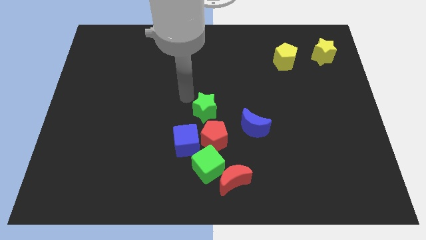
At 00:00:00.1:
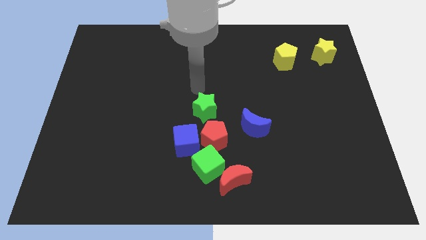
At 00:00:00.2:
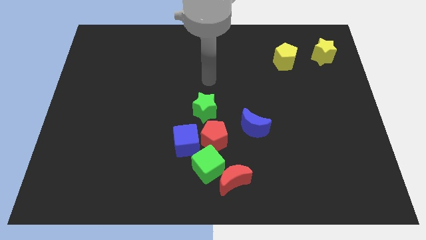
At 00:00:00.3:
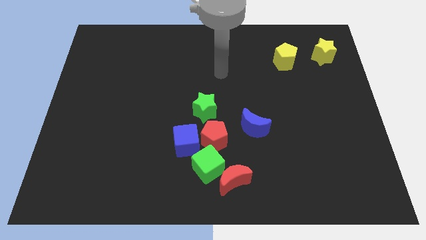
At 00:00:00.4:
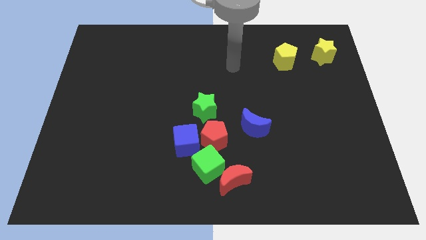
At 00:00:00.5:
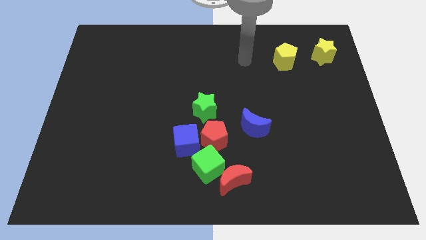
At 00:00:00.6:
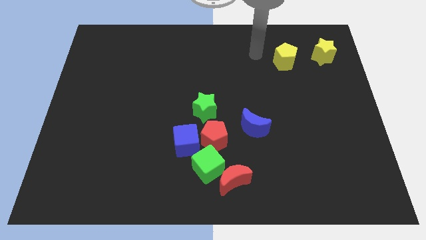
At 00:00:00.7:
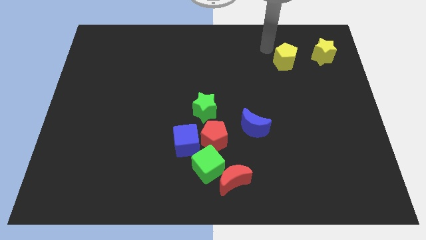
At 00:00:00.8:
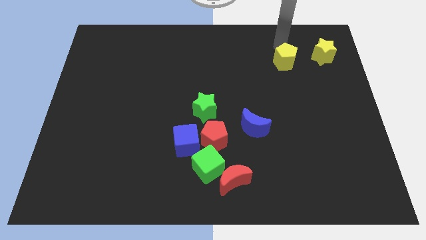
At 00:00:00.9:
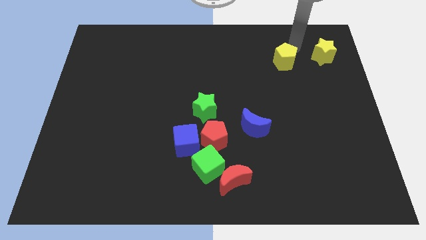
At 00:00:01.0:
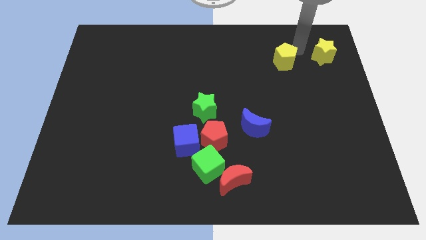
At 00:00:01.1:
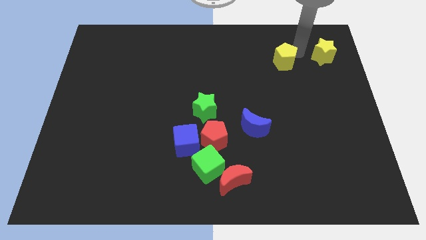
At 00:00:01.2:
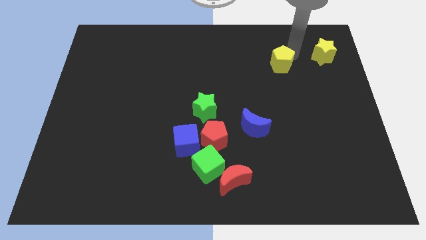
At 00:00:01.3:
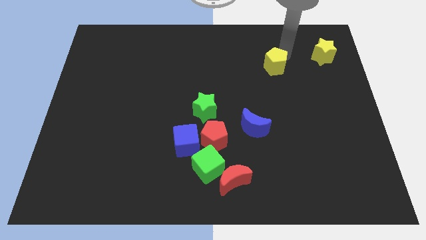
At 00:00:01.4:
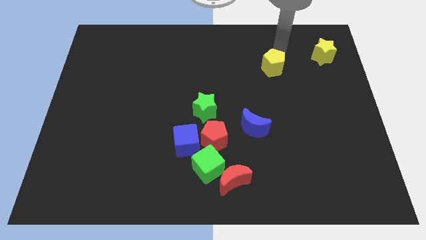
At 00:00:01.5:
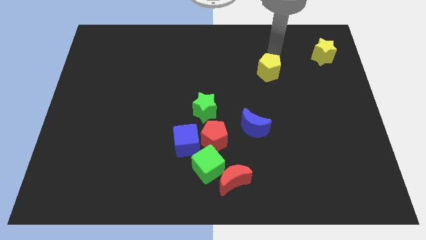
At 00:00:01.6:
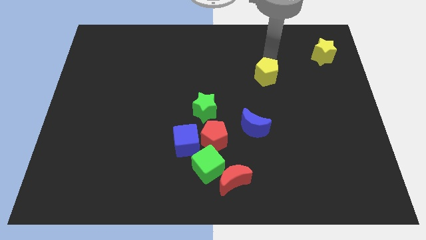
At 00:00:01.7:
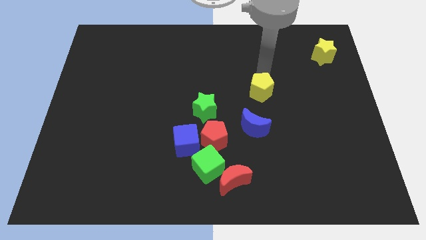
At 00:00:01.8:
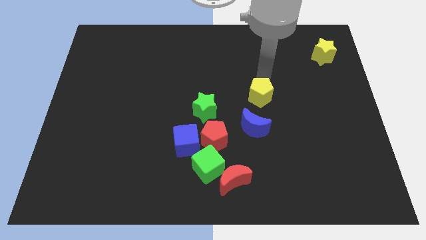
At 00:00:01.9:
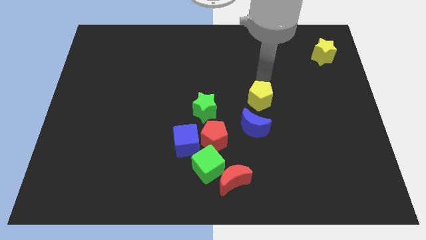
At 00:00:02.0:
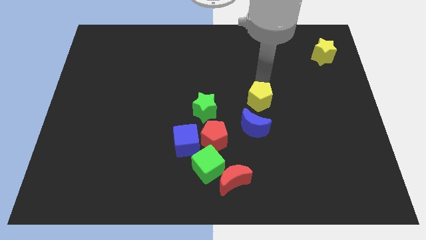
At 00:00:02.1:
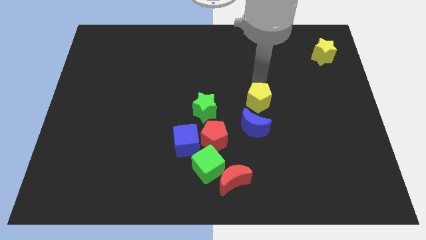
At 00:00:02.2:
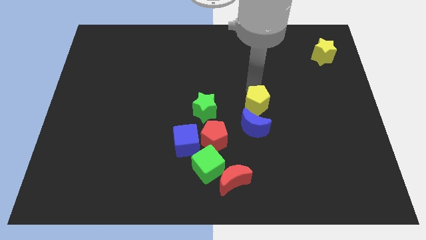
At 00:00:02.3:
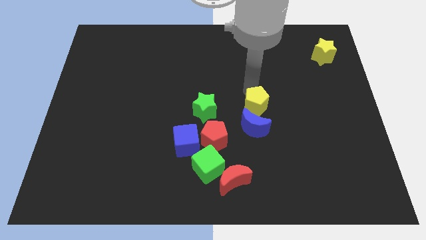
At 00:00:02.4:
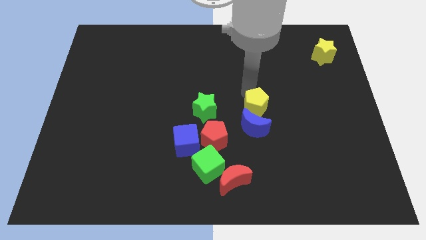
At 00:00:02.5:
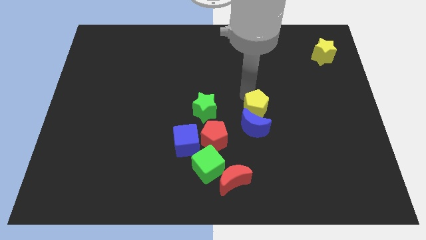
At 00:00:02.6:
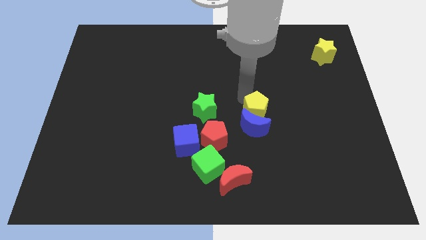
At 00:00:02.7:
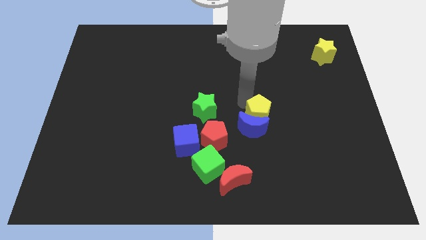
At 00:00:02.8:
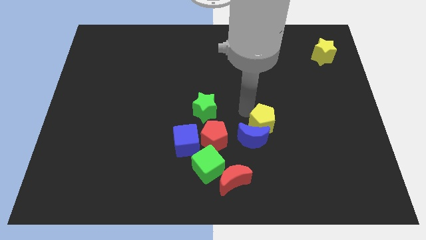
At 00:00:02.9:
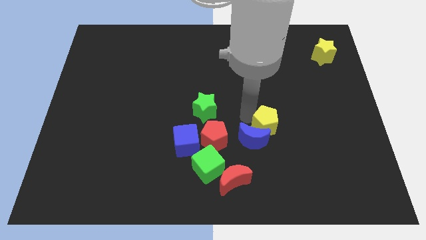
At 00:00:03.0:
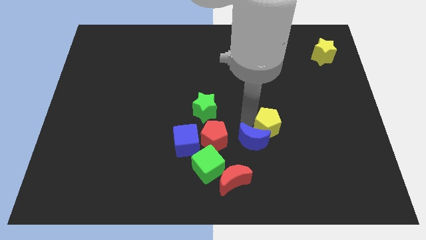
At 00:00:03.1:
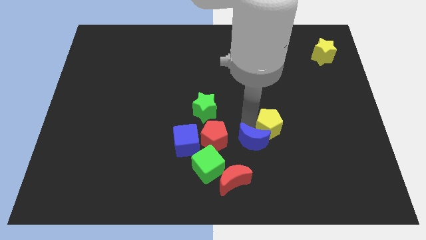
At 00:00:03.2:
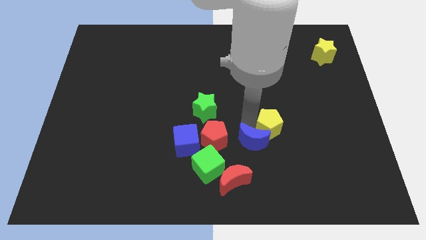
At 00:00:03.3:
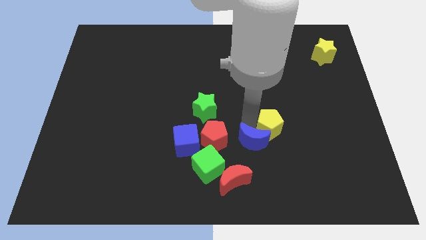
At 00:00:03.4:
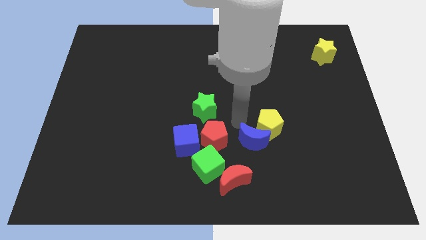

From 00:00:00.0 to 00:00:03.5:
push the yellow pentagon into the top side of the blue crescent

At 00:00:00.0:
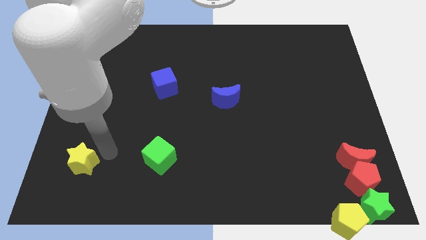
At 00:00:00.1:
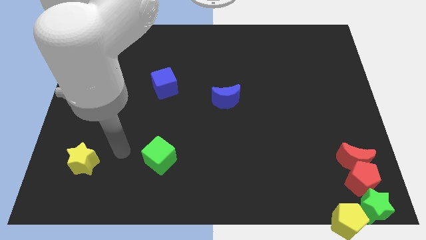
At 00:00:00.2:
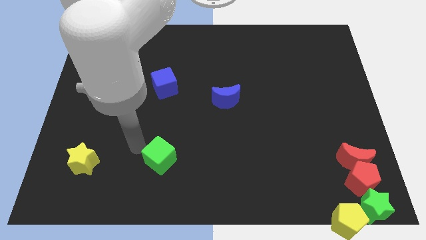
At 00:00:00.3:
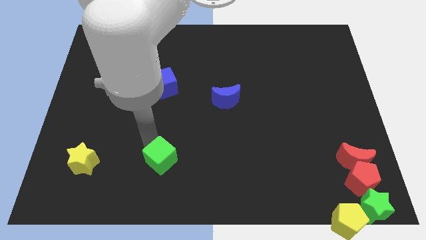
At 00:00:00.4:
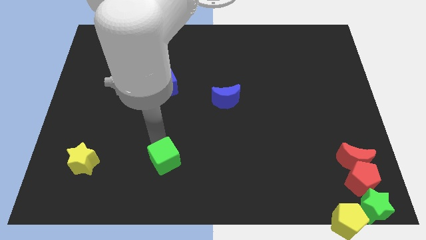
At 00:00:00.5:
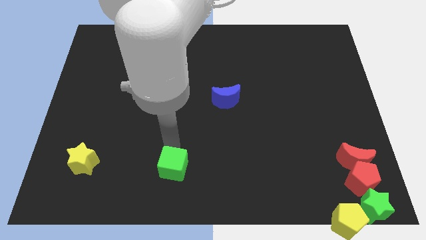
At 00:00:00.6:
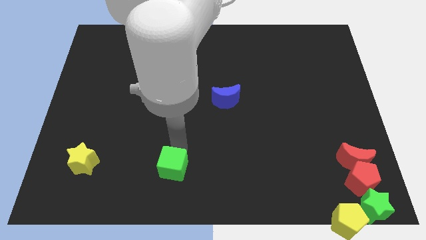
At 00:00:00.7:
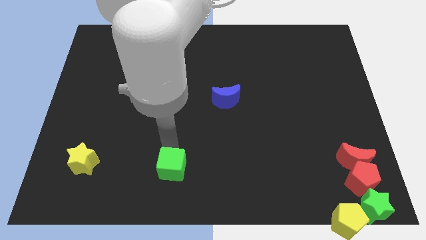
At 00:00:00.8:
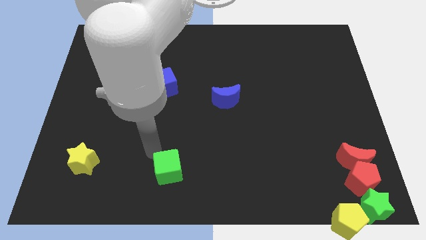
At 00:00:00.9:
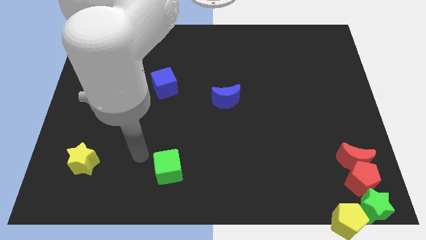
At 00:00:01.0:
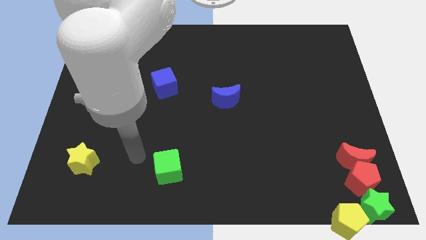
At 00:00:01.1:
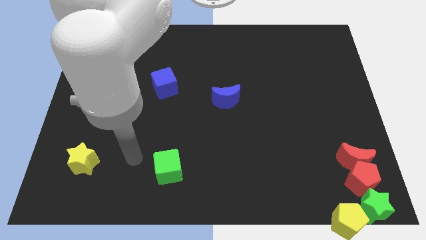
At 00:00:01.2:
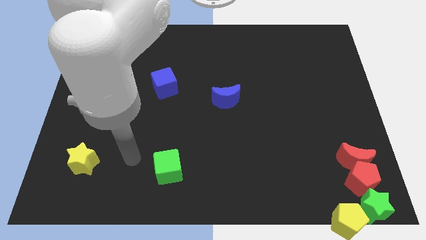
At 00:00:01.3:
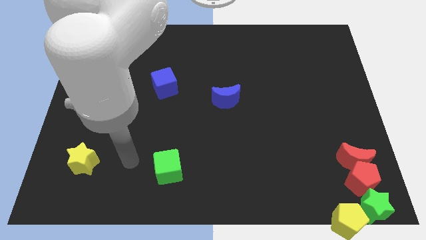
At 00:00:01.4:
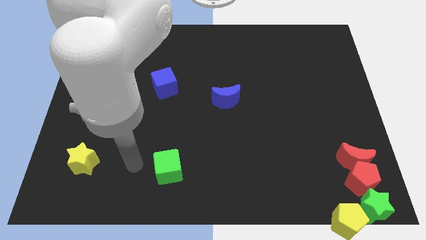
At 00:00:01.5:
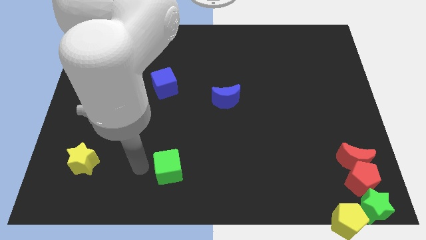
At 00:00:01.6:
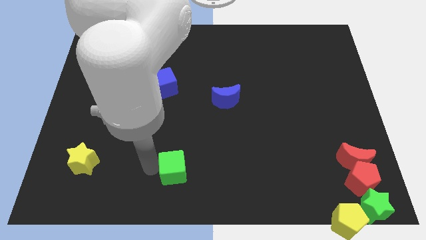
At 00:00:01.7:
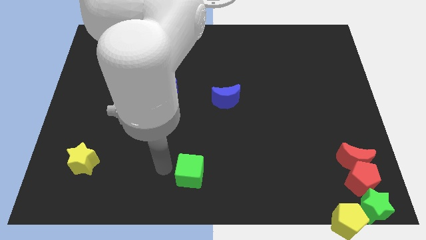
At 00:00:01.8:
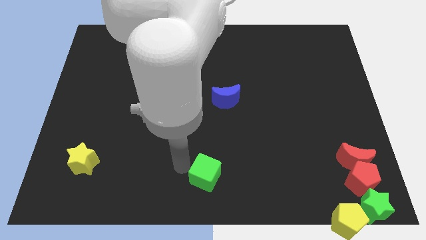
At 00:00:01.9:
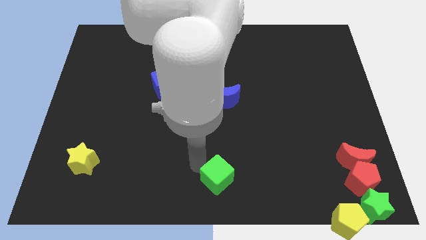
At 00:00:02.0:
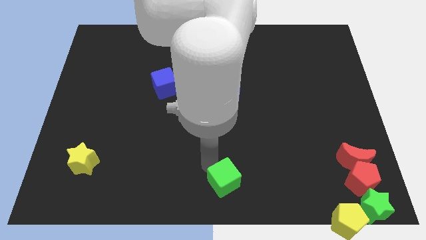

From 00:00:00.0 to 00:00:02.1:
slide the green cube to the bottom center of the board

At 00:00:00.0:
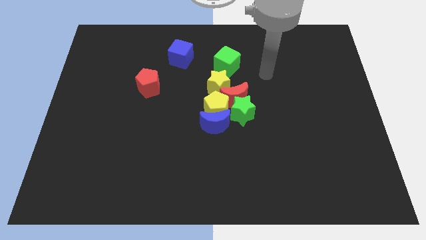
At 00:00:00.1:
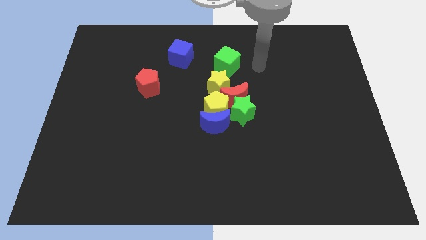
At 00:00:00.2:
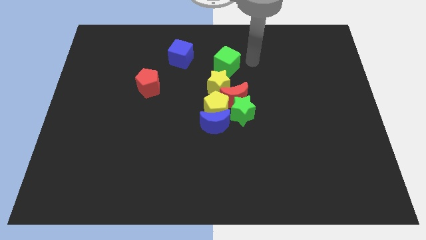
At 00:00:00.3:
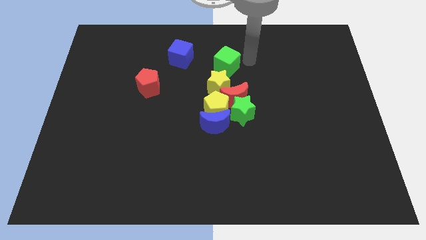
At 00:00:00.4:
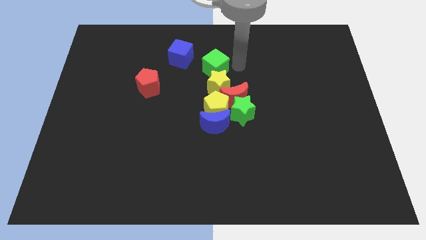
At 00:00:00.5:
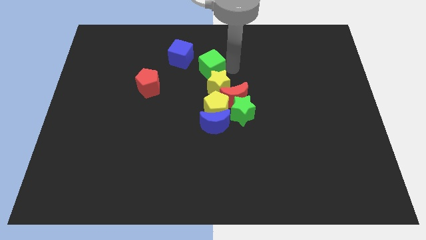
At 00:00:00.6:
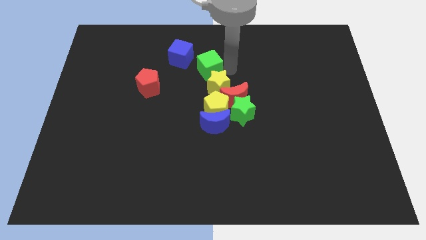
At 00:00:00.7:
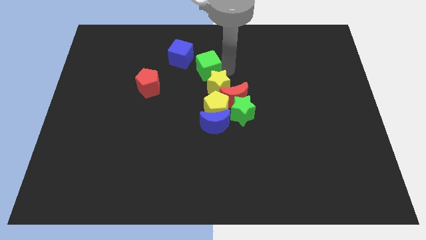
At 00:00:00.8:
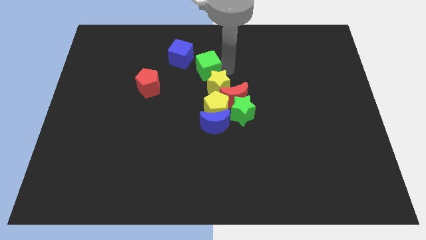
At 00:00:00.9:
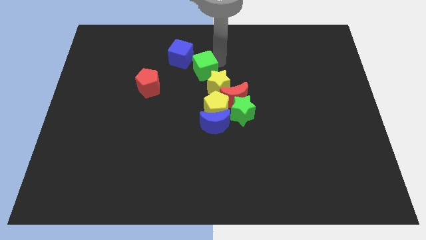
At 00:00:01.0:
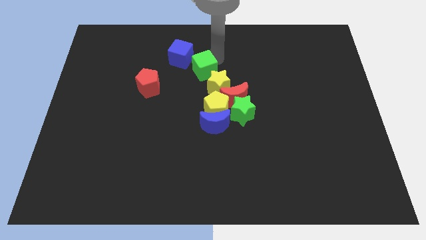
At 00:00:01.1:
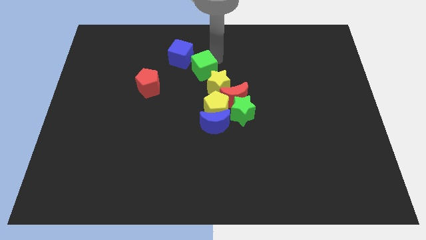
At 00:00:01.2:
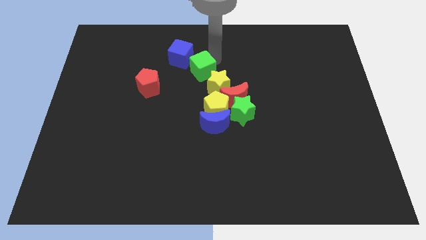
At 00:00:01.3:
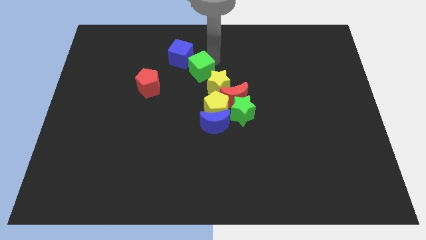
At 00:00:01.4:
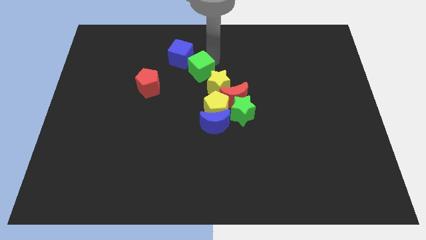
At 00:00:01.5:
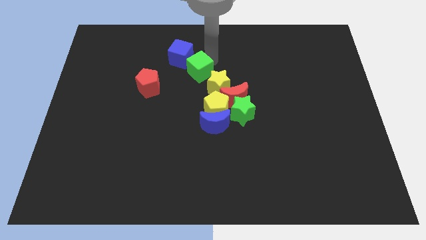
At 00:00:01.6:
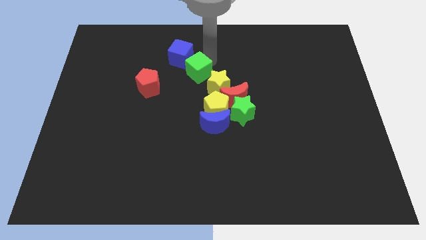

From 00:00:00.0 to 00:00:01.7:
place the green cube in between the yellow star and the blue cube

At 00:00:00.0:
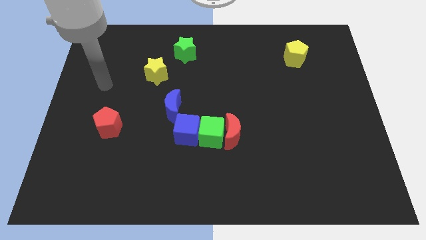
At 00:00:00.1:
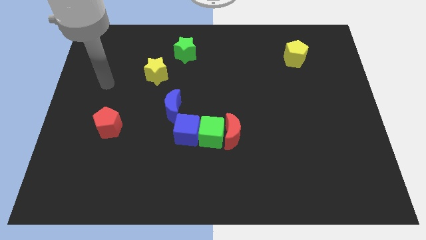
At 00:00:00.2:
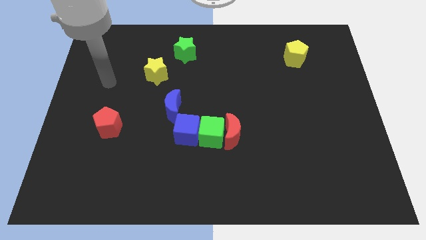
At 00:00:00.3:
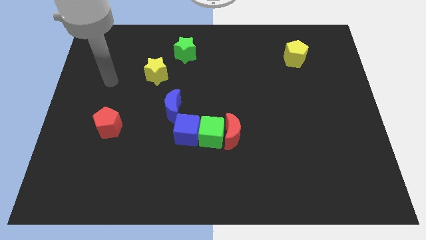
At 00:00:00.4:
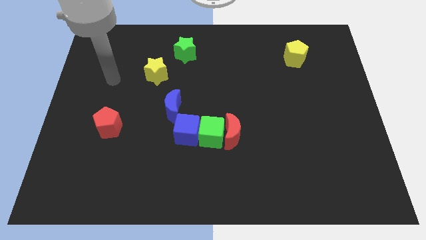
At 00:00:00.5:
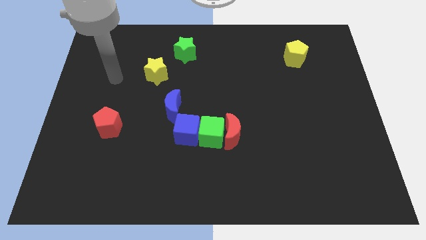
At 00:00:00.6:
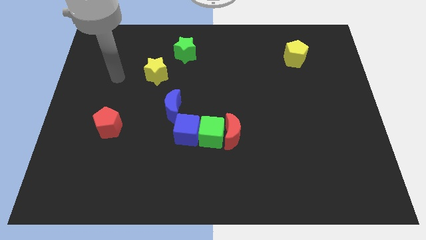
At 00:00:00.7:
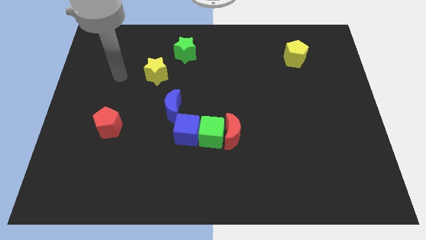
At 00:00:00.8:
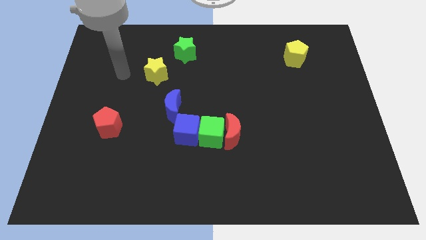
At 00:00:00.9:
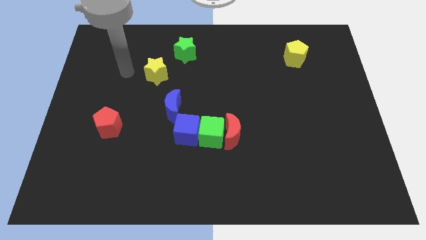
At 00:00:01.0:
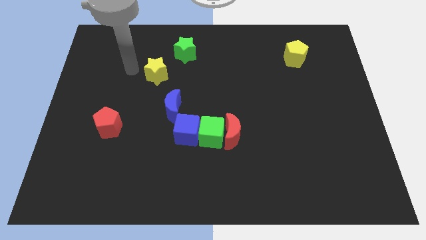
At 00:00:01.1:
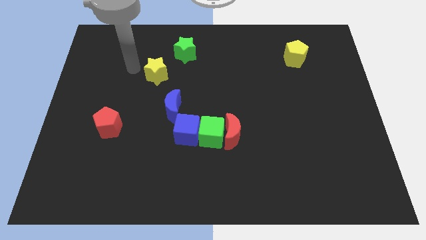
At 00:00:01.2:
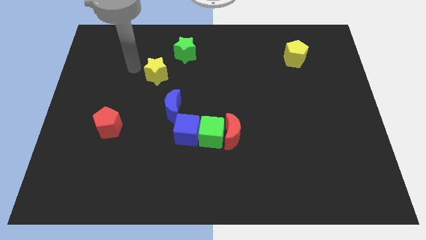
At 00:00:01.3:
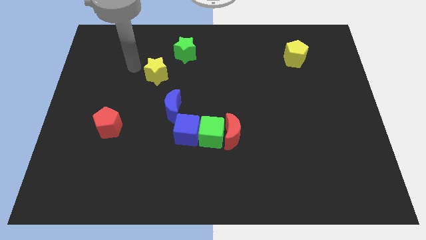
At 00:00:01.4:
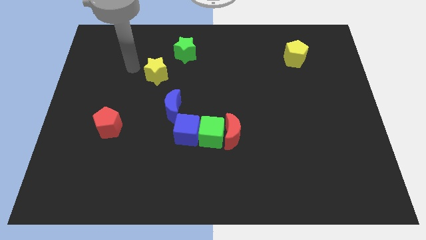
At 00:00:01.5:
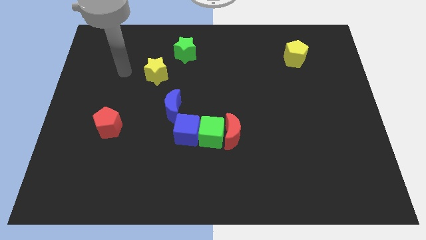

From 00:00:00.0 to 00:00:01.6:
point your hand at the left side of the yellow star
